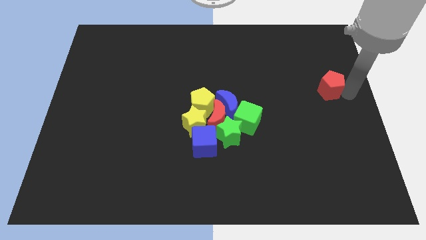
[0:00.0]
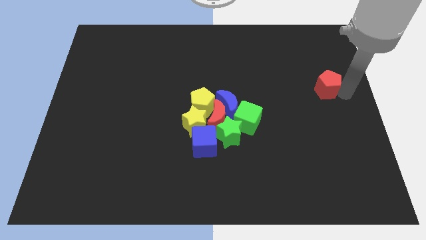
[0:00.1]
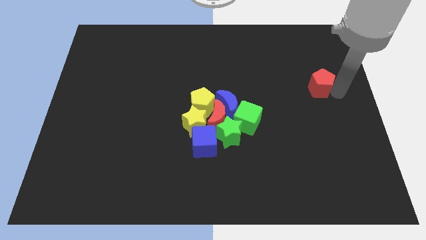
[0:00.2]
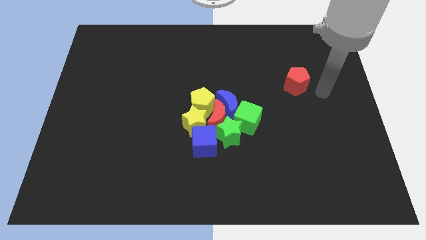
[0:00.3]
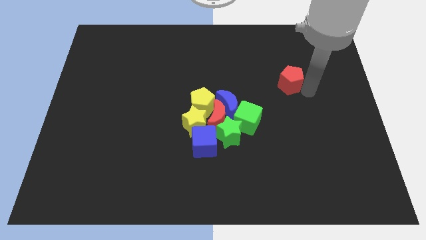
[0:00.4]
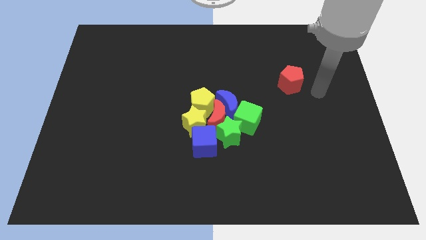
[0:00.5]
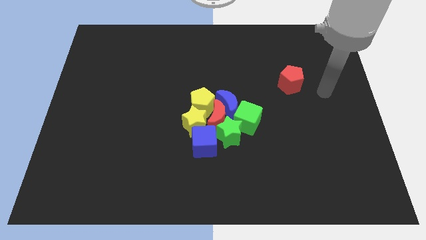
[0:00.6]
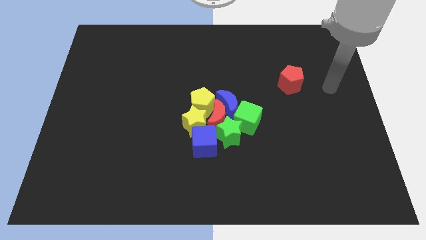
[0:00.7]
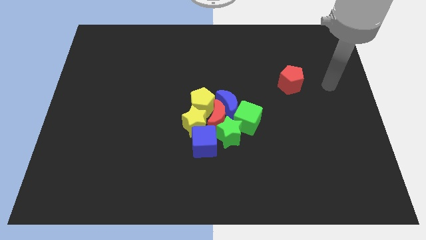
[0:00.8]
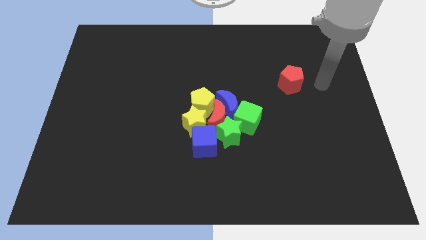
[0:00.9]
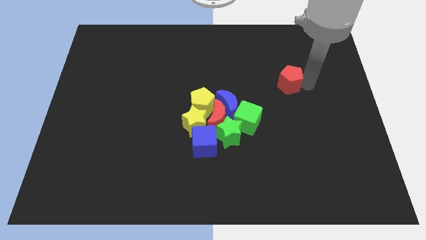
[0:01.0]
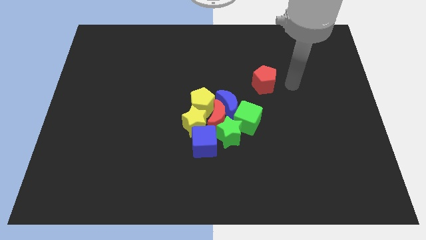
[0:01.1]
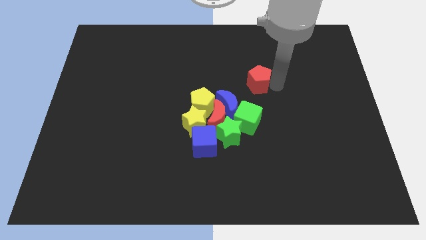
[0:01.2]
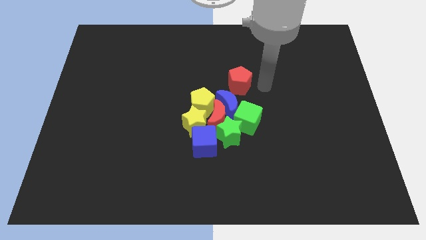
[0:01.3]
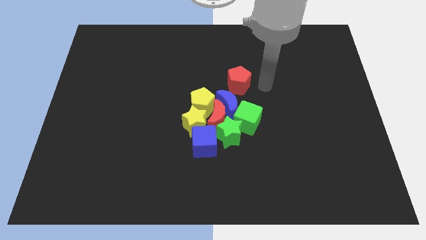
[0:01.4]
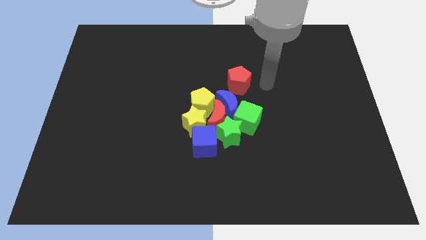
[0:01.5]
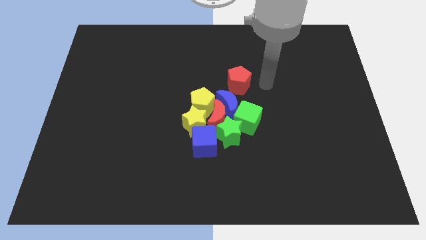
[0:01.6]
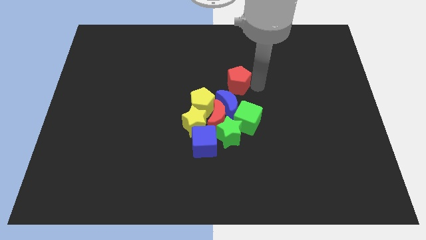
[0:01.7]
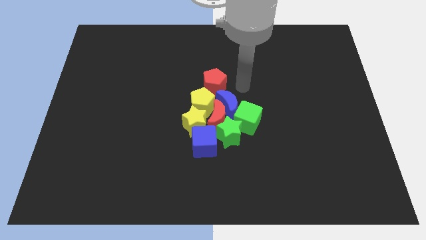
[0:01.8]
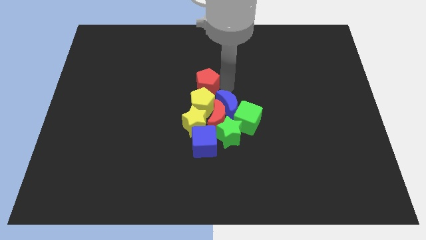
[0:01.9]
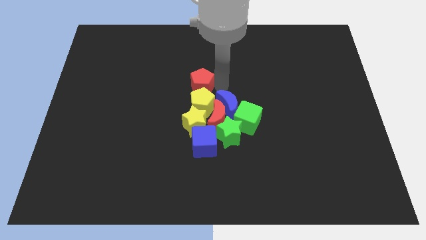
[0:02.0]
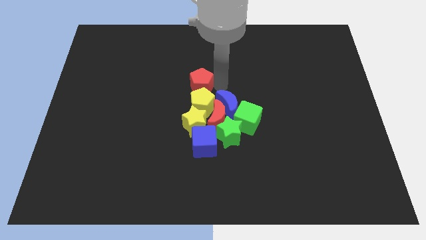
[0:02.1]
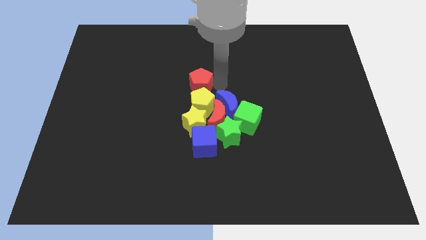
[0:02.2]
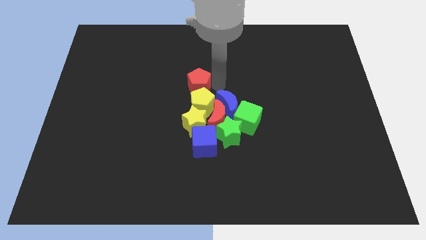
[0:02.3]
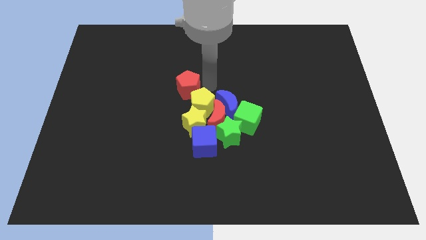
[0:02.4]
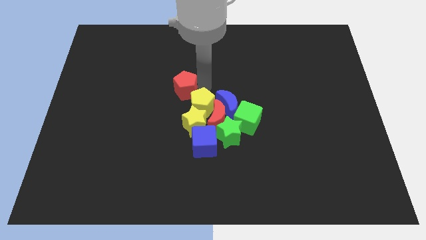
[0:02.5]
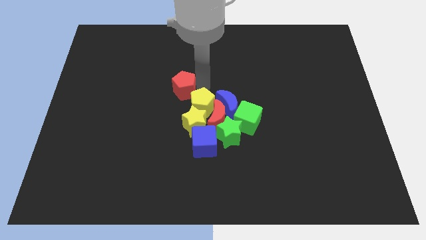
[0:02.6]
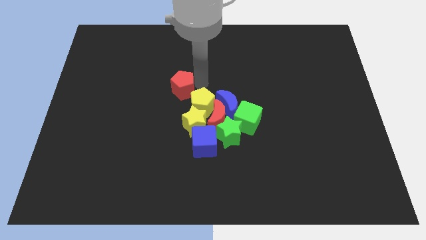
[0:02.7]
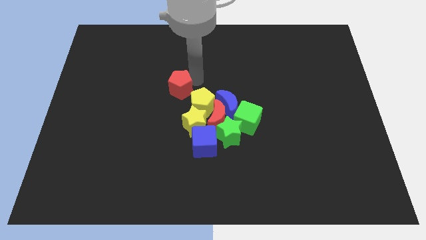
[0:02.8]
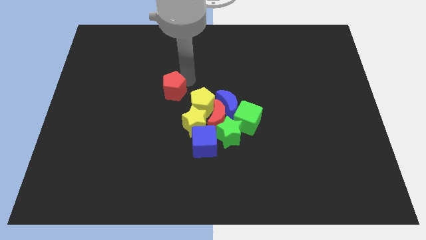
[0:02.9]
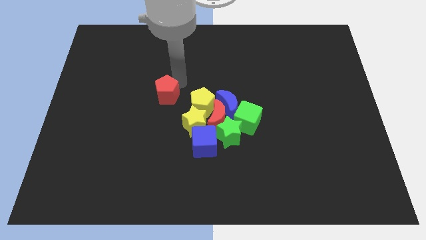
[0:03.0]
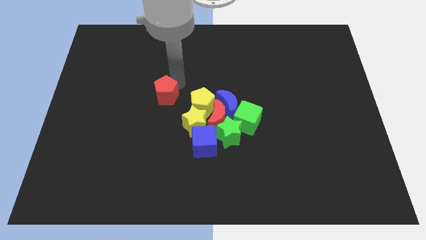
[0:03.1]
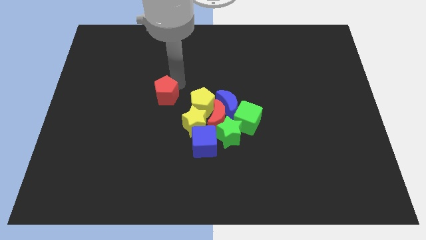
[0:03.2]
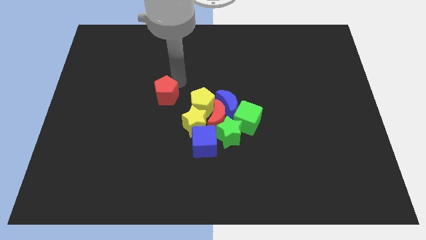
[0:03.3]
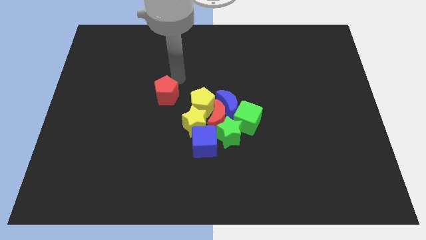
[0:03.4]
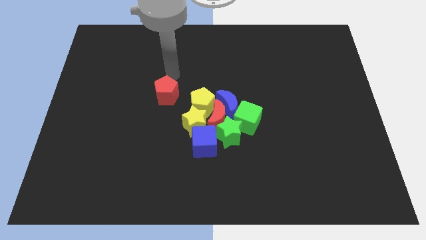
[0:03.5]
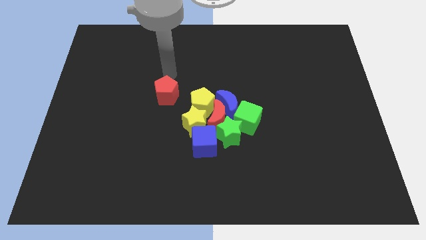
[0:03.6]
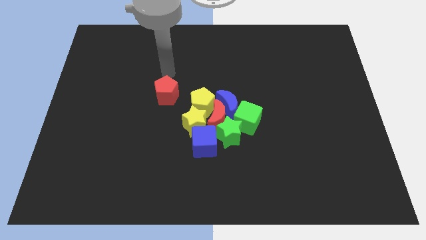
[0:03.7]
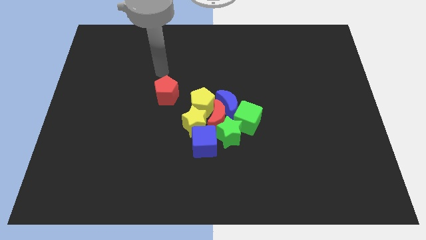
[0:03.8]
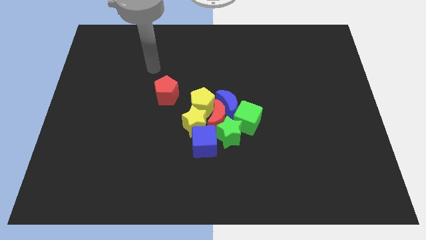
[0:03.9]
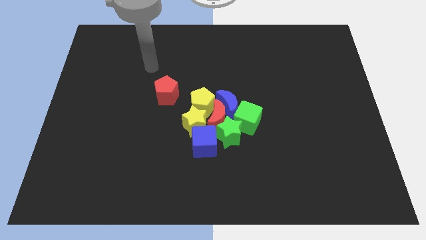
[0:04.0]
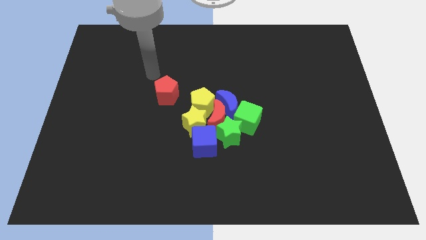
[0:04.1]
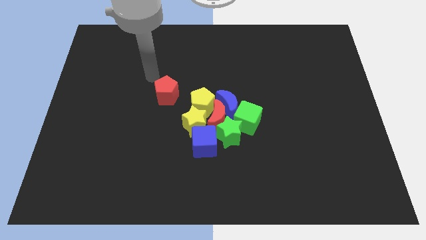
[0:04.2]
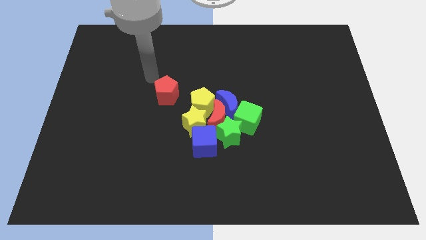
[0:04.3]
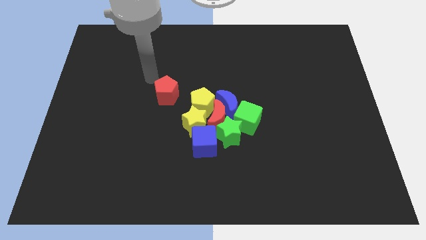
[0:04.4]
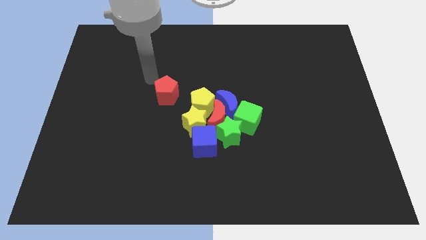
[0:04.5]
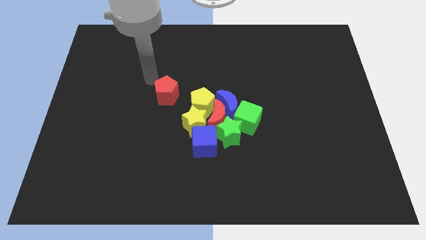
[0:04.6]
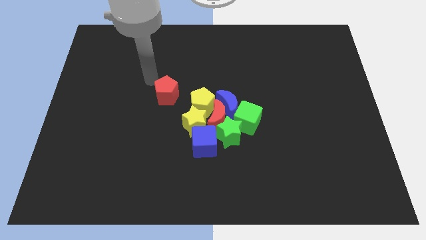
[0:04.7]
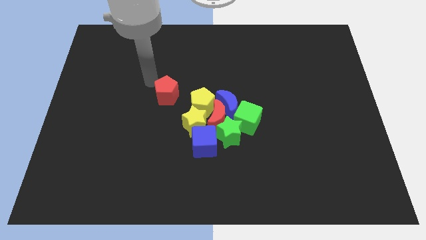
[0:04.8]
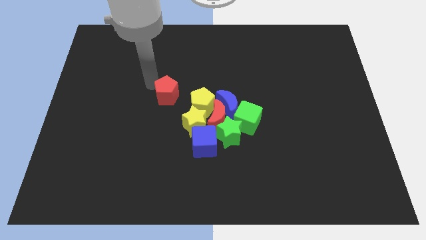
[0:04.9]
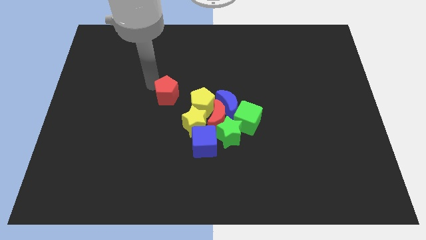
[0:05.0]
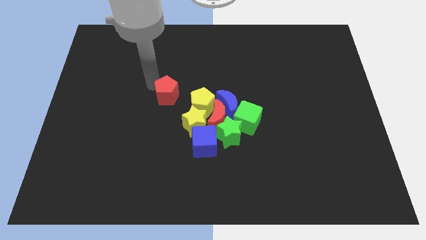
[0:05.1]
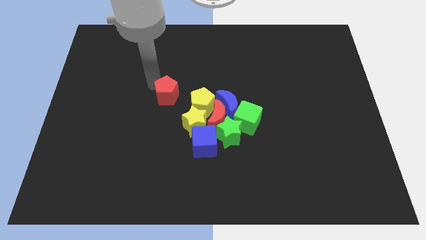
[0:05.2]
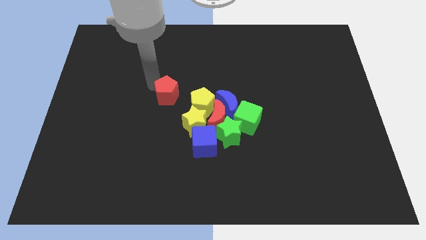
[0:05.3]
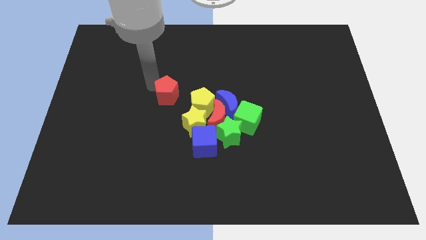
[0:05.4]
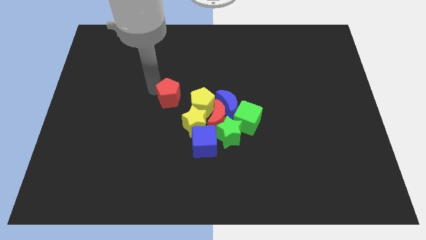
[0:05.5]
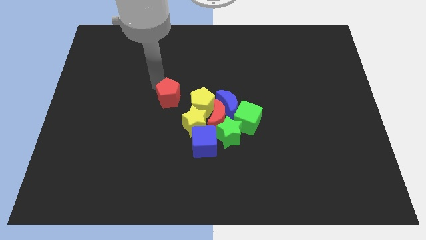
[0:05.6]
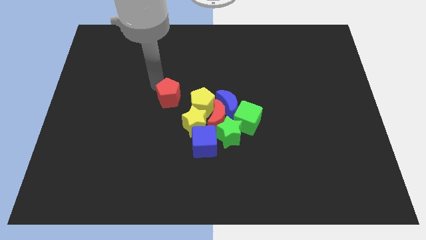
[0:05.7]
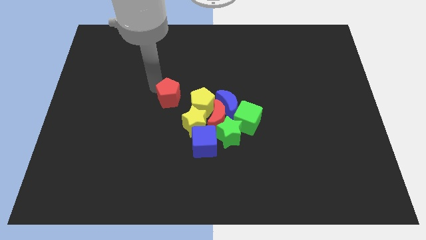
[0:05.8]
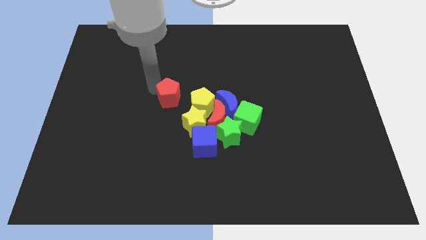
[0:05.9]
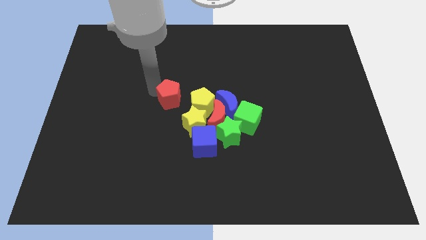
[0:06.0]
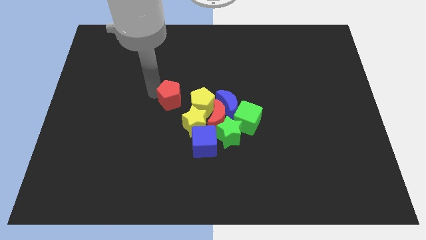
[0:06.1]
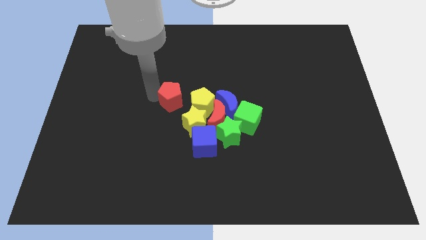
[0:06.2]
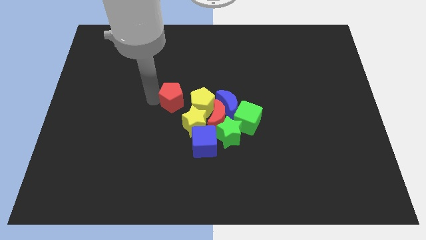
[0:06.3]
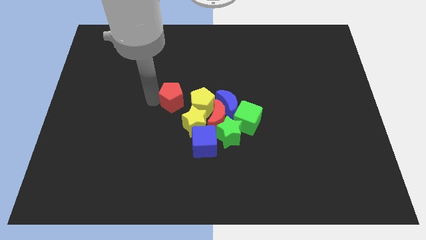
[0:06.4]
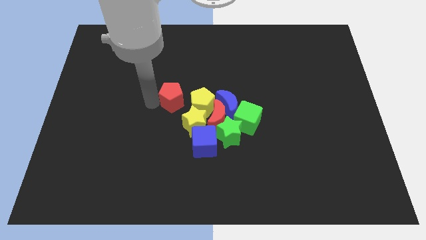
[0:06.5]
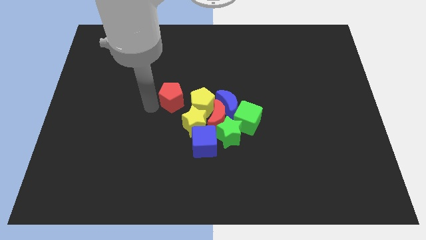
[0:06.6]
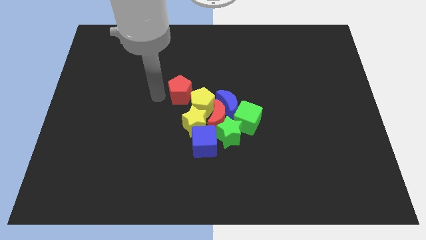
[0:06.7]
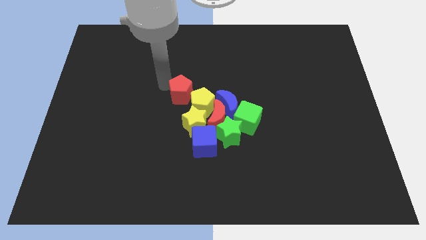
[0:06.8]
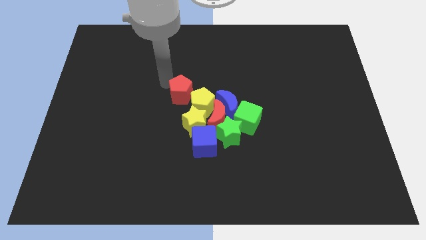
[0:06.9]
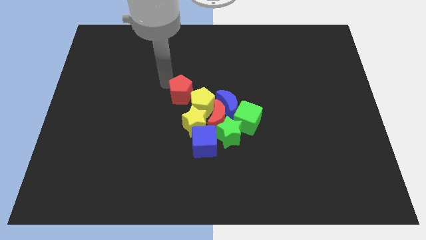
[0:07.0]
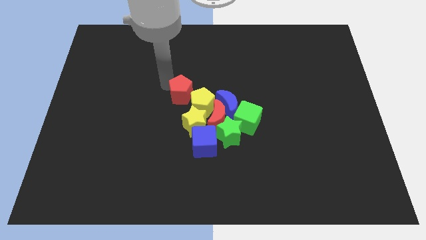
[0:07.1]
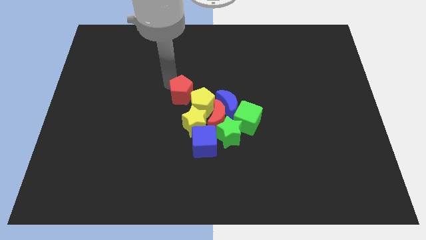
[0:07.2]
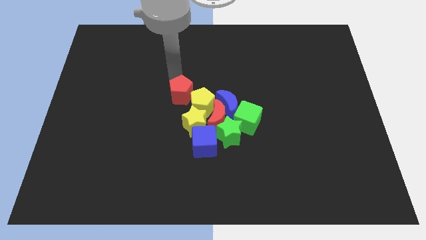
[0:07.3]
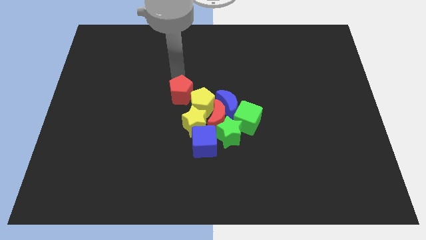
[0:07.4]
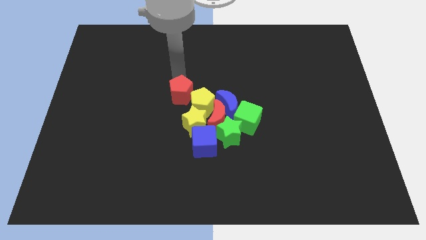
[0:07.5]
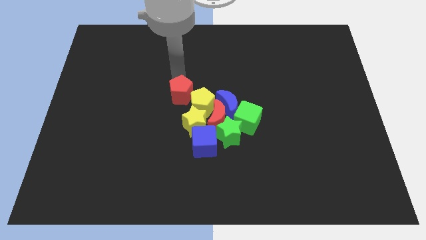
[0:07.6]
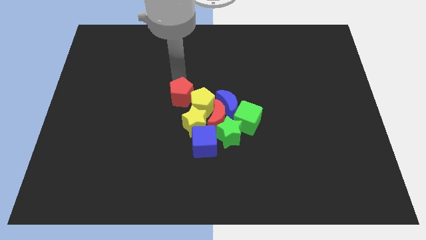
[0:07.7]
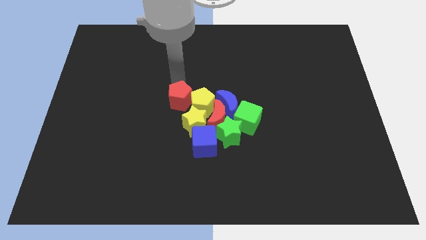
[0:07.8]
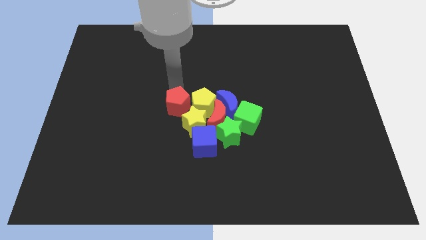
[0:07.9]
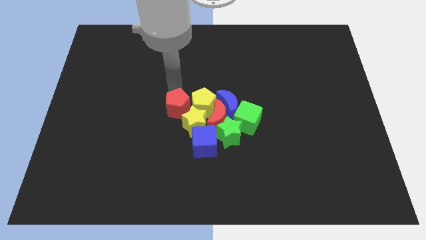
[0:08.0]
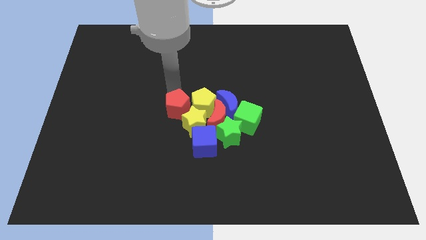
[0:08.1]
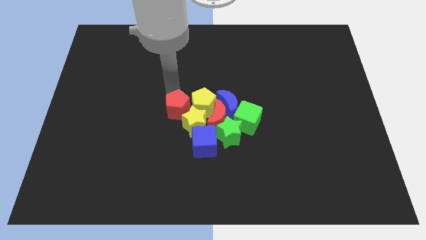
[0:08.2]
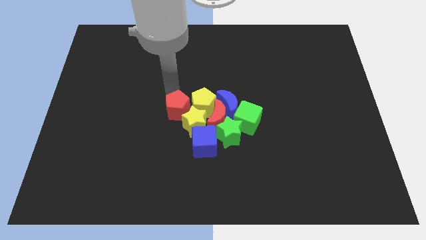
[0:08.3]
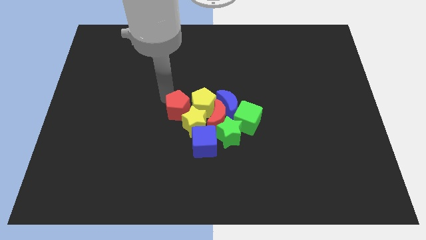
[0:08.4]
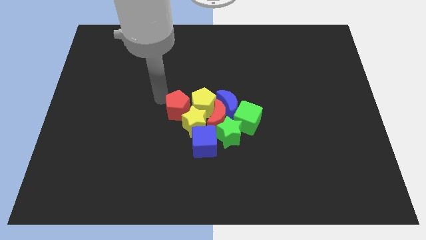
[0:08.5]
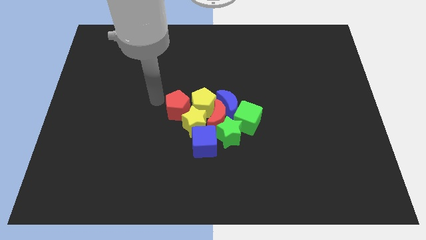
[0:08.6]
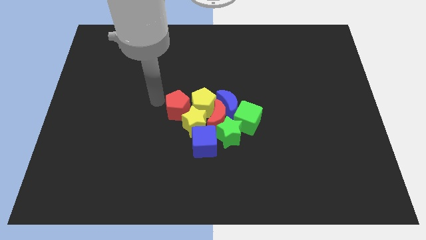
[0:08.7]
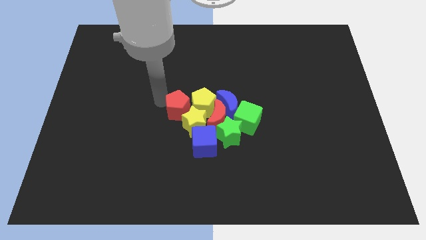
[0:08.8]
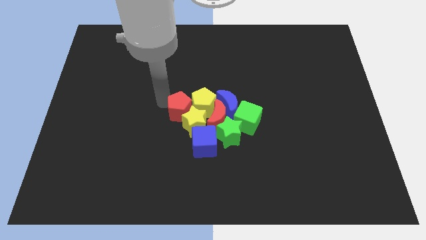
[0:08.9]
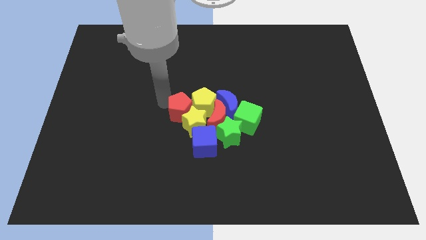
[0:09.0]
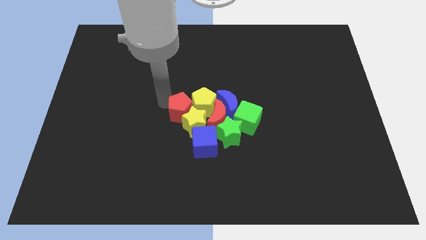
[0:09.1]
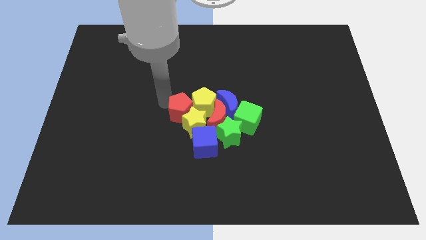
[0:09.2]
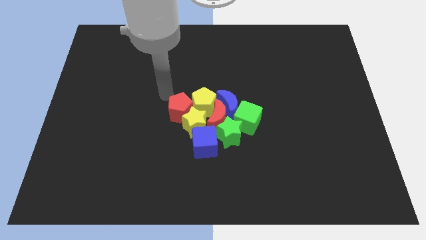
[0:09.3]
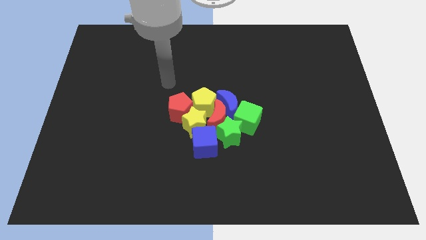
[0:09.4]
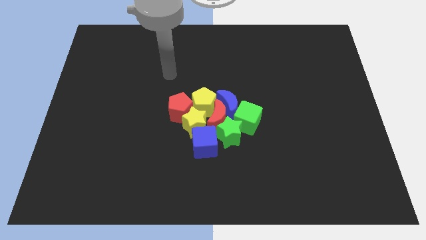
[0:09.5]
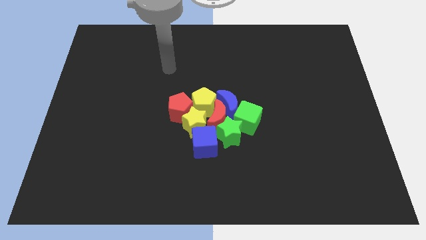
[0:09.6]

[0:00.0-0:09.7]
move the red pentagon into the yellow blocks at the center of the board
